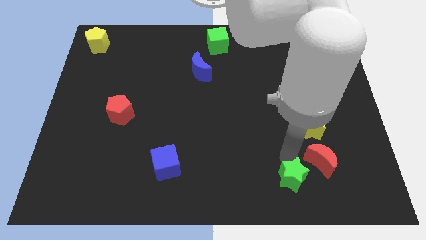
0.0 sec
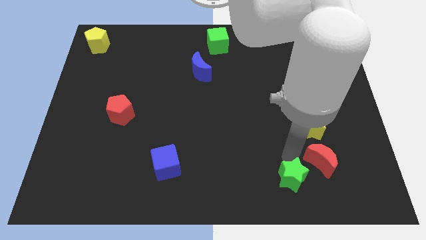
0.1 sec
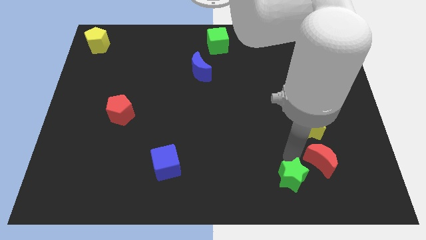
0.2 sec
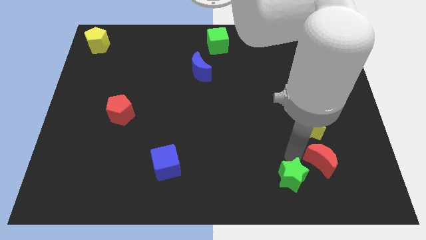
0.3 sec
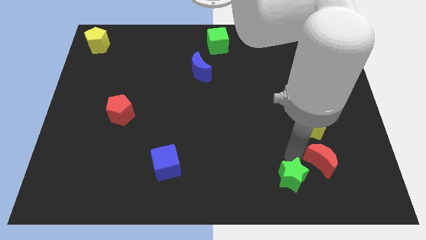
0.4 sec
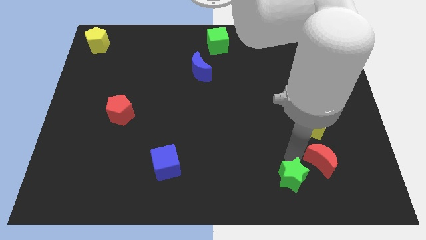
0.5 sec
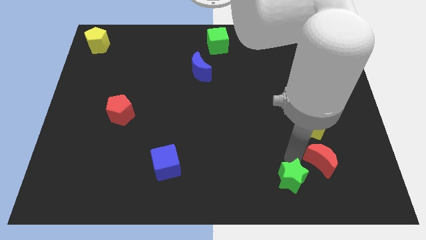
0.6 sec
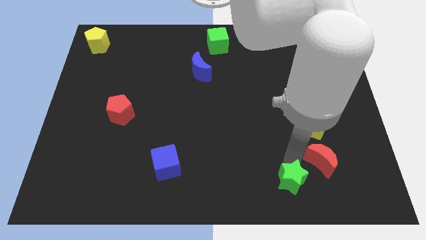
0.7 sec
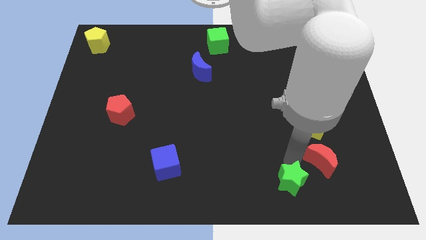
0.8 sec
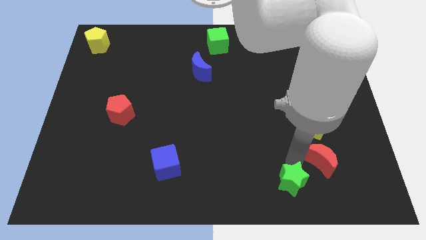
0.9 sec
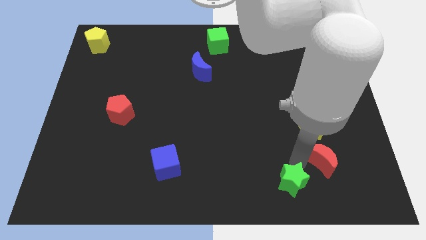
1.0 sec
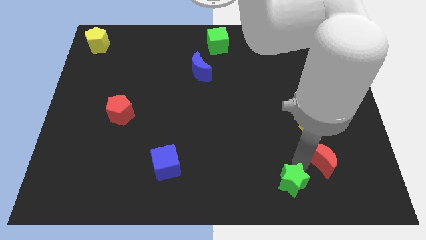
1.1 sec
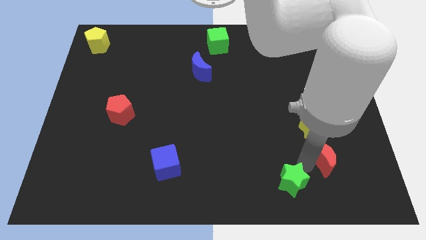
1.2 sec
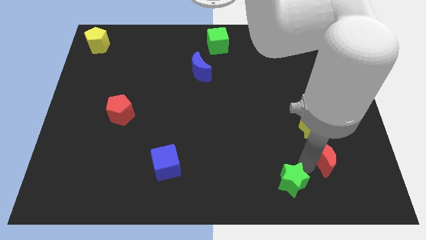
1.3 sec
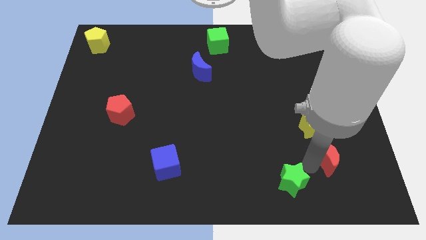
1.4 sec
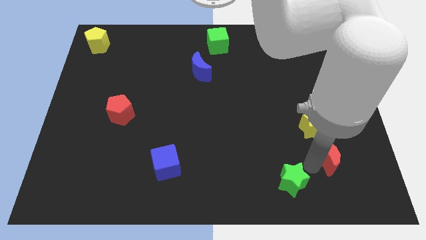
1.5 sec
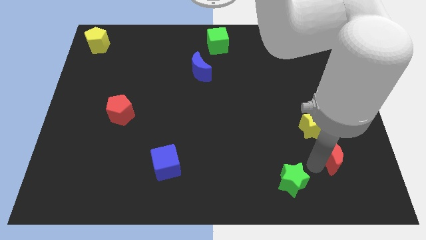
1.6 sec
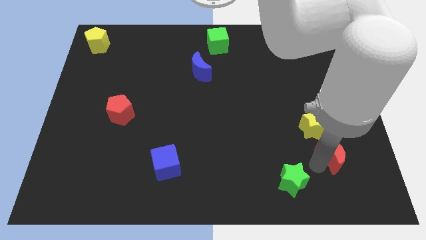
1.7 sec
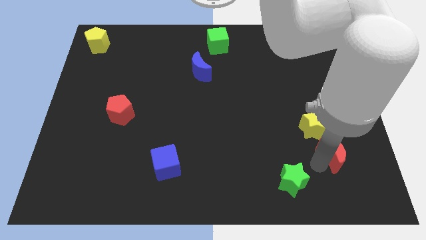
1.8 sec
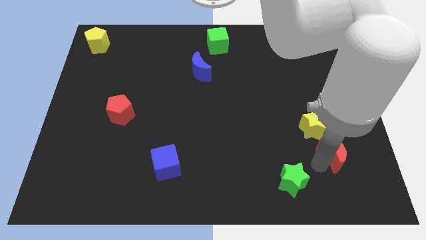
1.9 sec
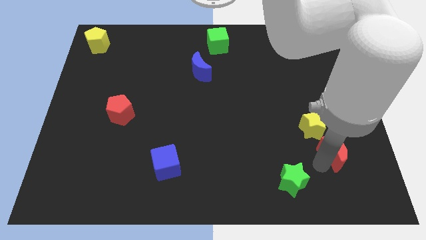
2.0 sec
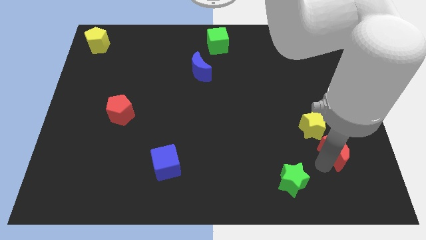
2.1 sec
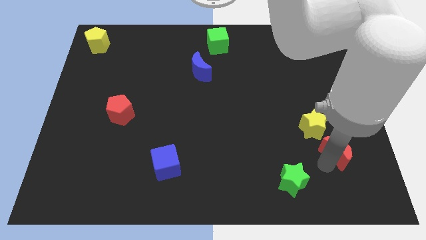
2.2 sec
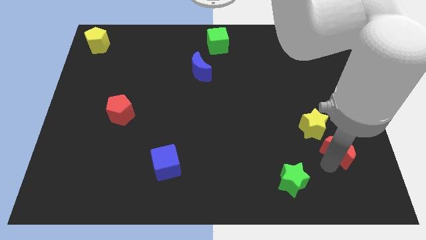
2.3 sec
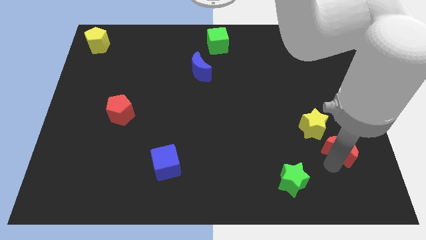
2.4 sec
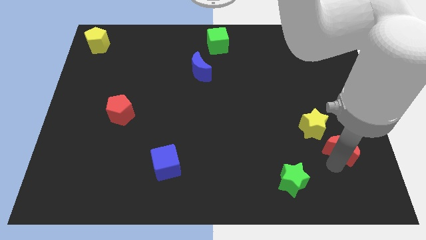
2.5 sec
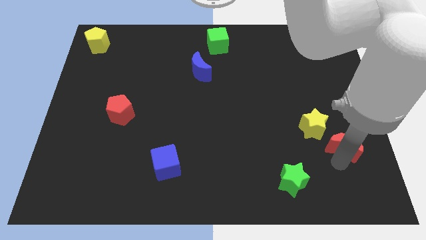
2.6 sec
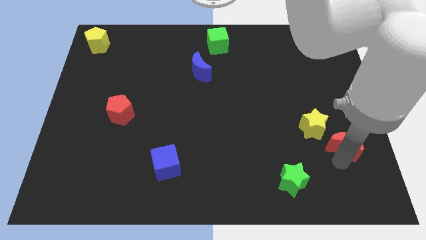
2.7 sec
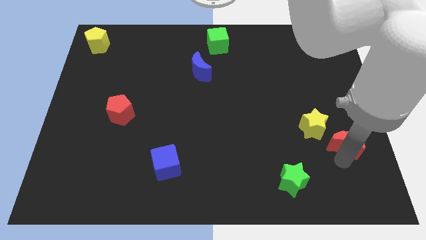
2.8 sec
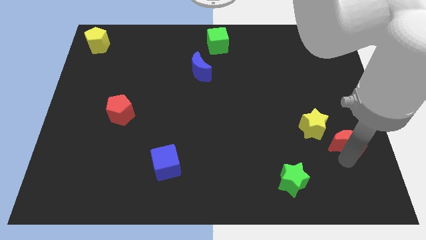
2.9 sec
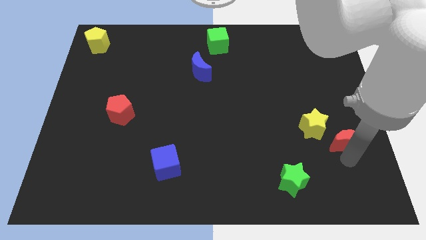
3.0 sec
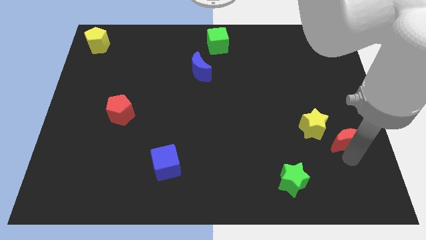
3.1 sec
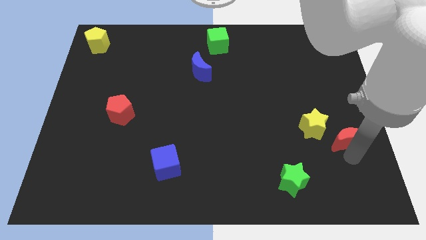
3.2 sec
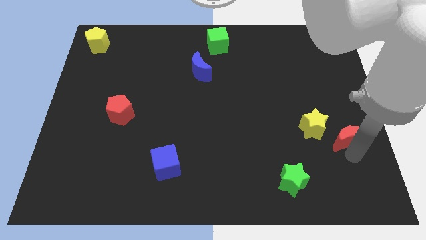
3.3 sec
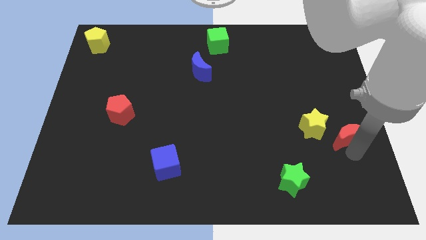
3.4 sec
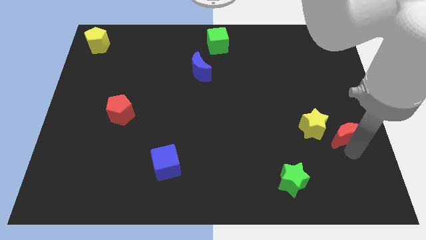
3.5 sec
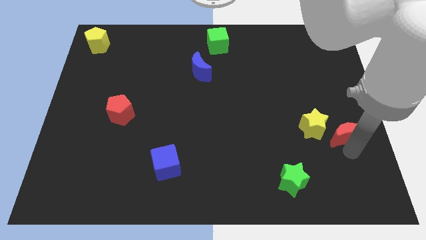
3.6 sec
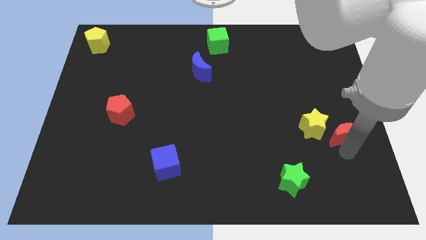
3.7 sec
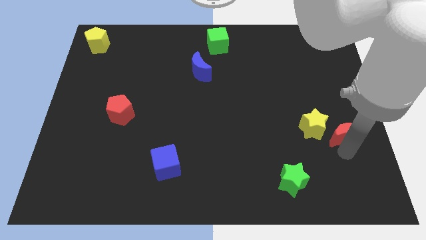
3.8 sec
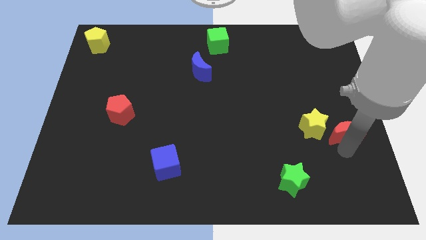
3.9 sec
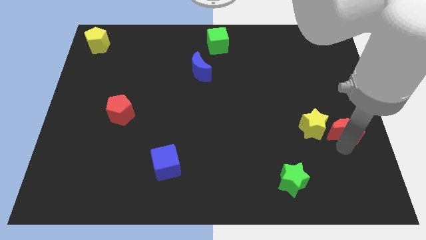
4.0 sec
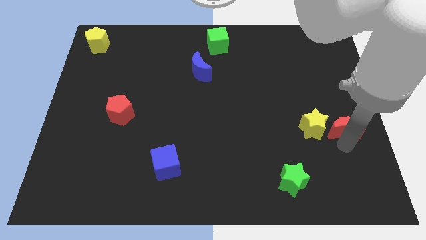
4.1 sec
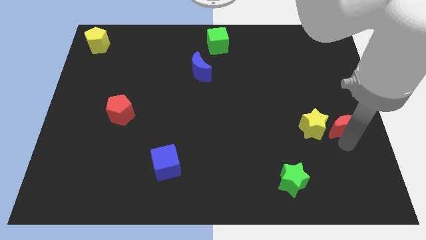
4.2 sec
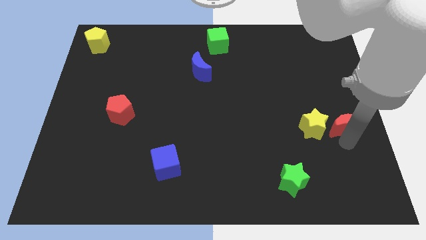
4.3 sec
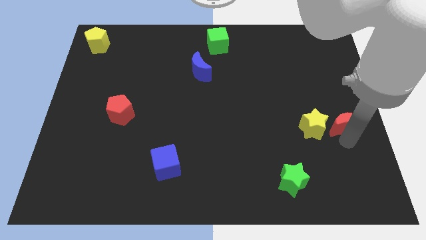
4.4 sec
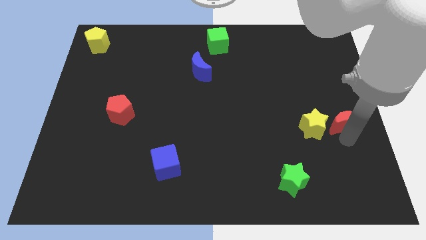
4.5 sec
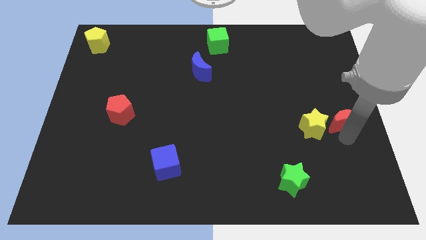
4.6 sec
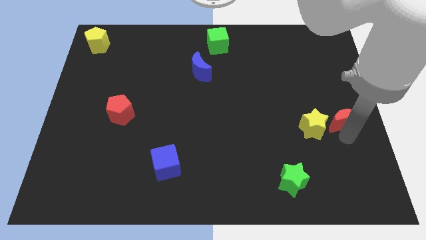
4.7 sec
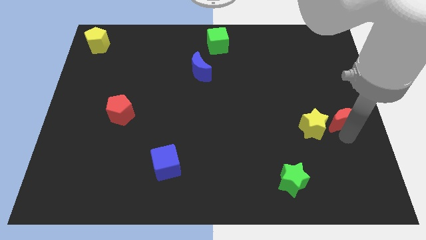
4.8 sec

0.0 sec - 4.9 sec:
move the red crecent to the right side of the yellow star

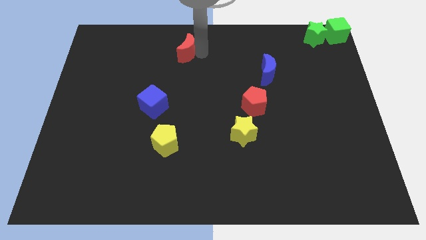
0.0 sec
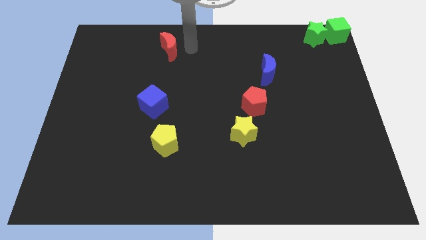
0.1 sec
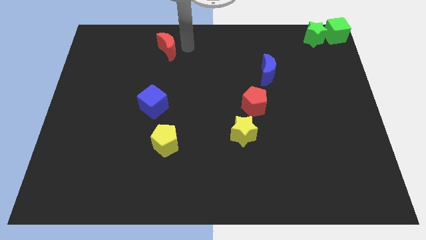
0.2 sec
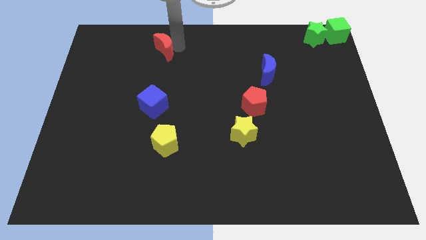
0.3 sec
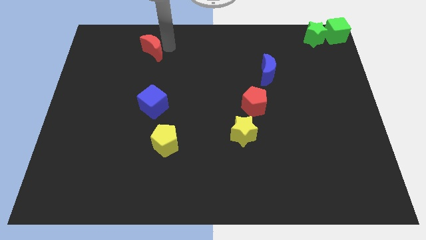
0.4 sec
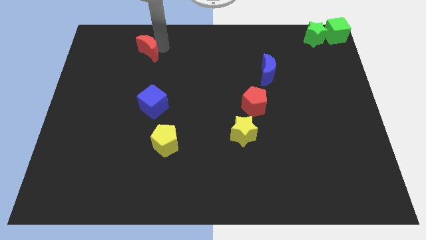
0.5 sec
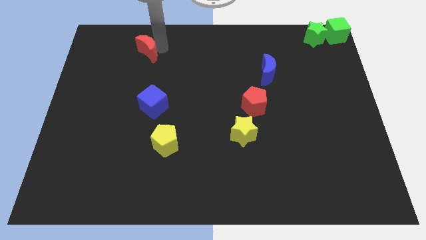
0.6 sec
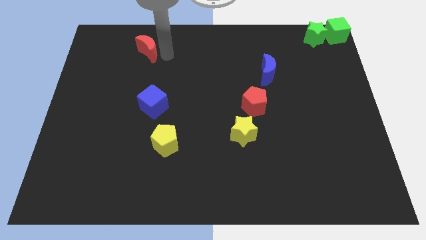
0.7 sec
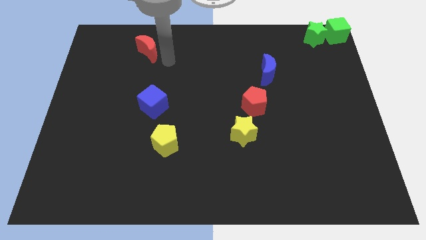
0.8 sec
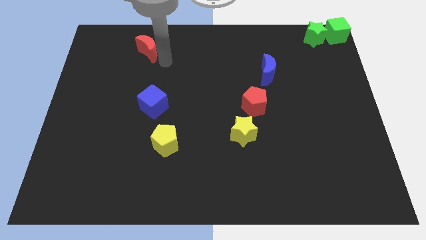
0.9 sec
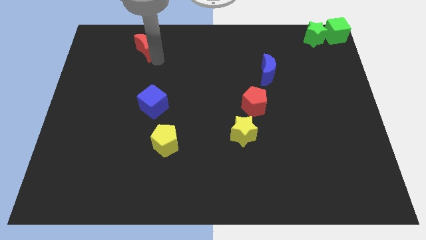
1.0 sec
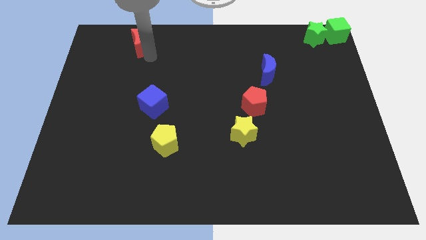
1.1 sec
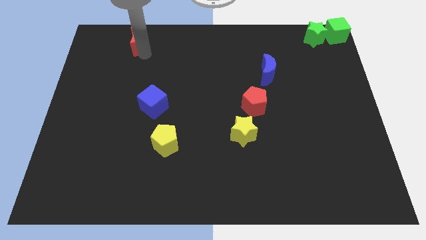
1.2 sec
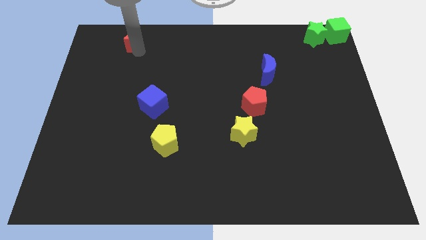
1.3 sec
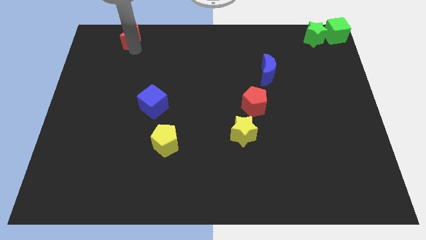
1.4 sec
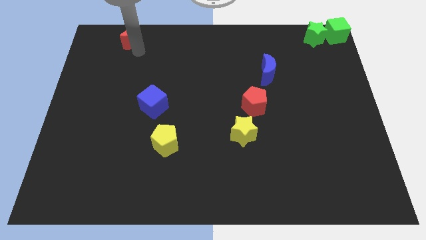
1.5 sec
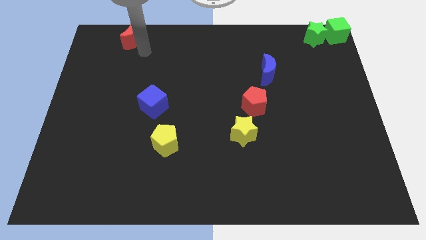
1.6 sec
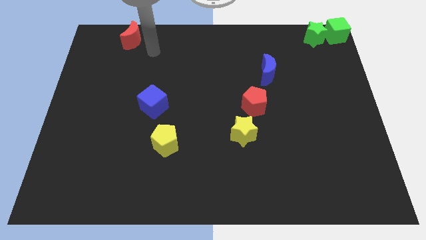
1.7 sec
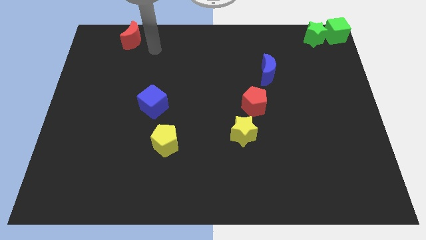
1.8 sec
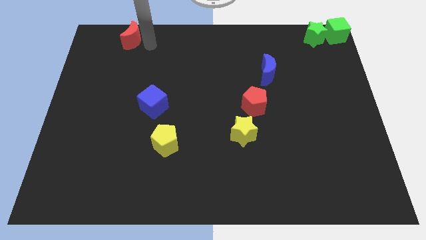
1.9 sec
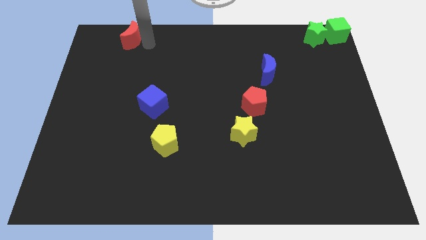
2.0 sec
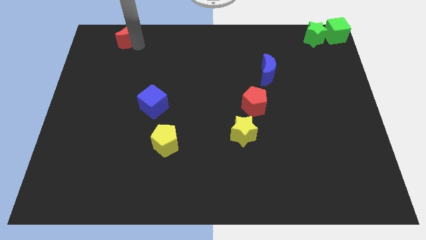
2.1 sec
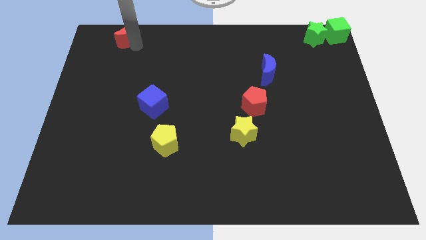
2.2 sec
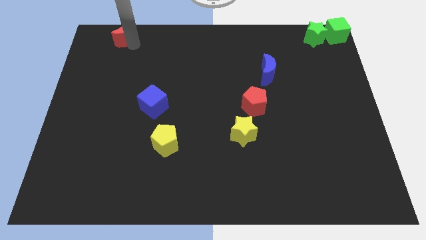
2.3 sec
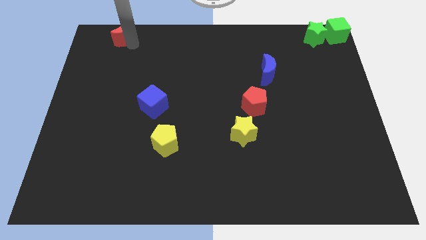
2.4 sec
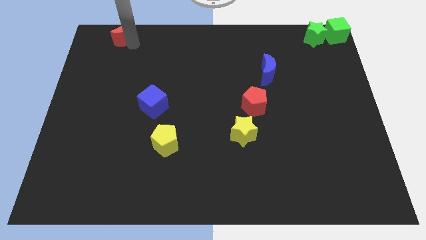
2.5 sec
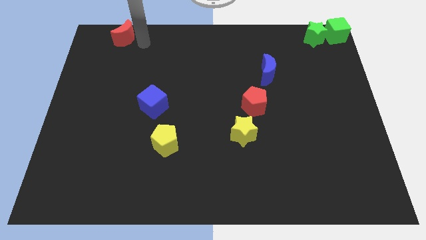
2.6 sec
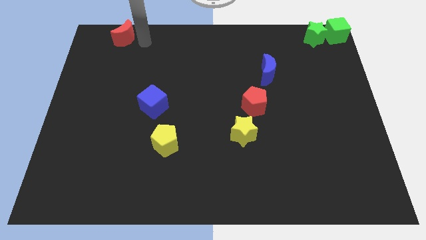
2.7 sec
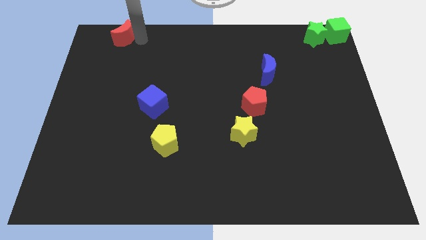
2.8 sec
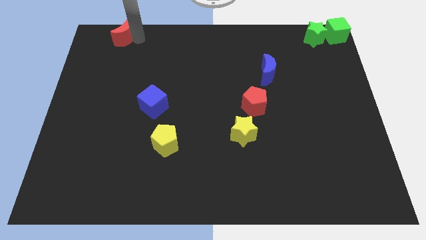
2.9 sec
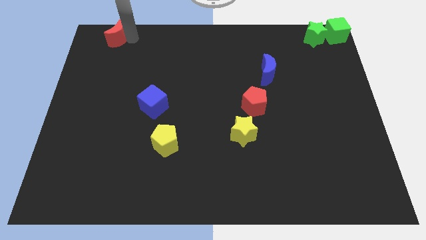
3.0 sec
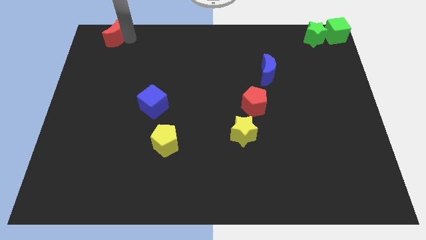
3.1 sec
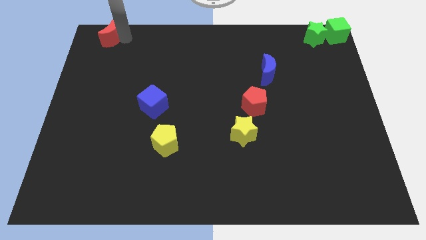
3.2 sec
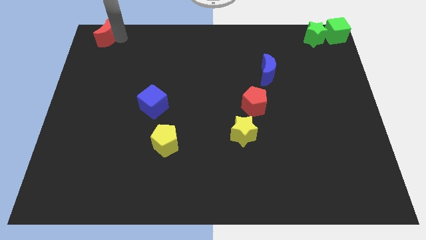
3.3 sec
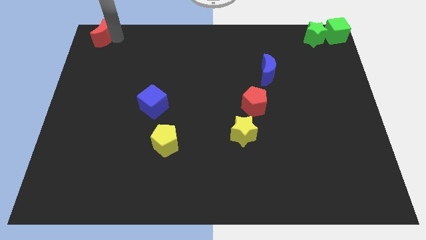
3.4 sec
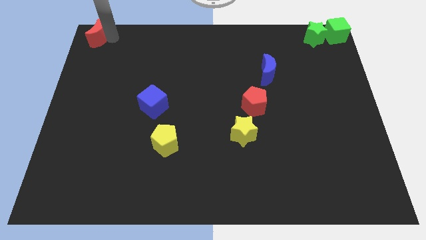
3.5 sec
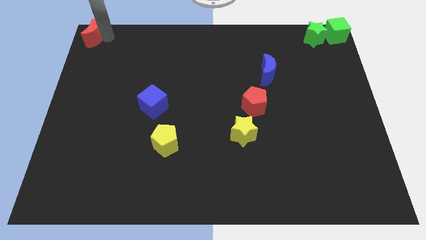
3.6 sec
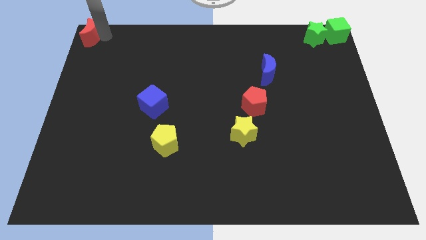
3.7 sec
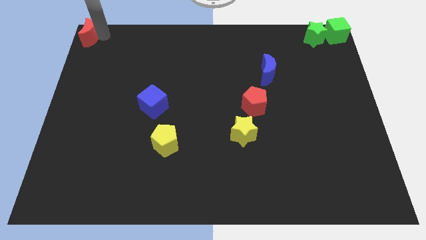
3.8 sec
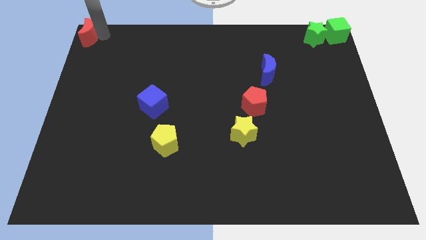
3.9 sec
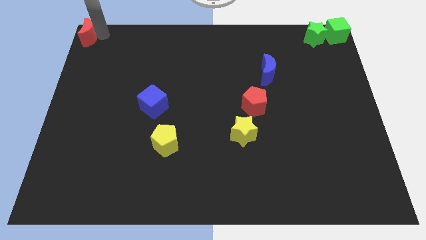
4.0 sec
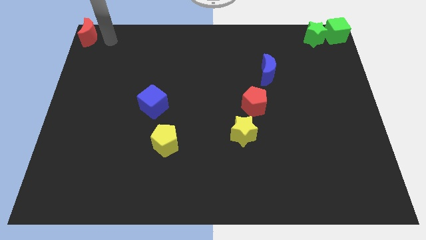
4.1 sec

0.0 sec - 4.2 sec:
put the red crescent at the top left corner of the board
